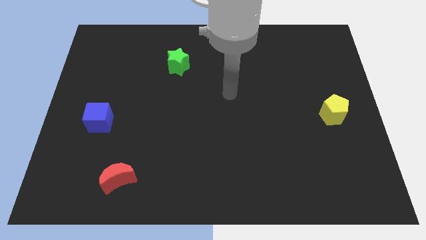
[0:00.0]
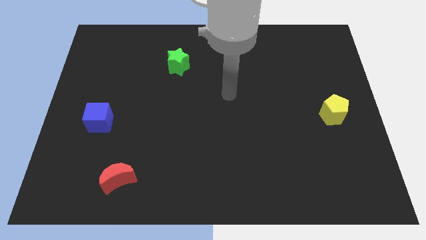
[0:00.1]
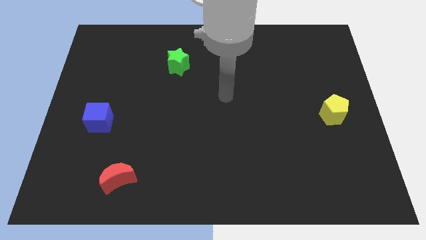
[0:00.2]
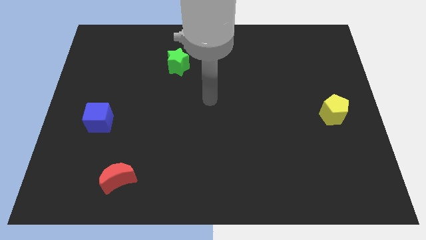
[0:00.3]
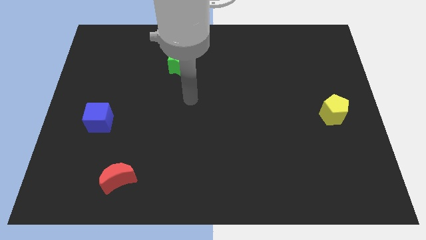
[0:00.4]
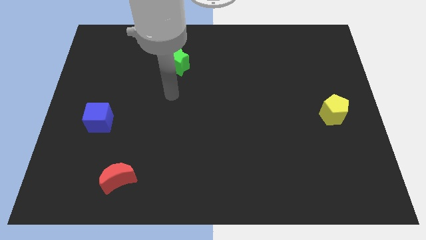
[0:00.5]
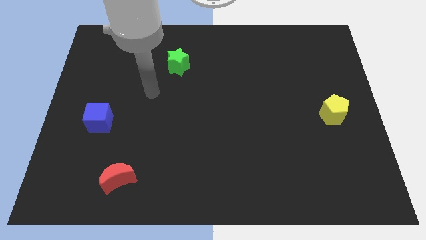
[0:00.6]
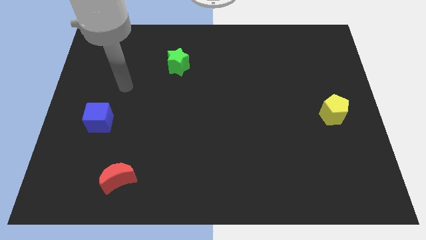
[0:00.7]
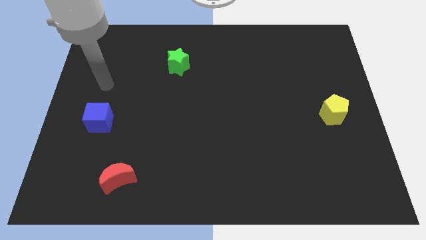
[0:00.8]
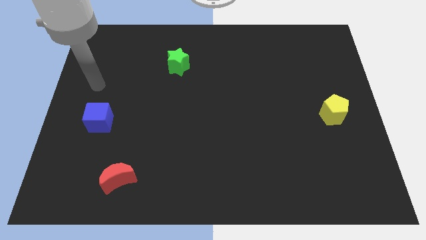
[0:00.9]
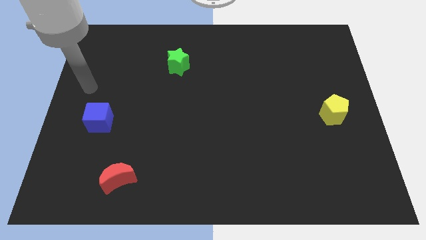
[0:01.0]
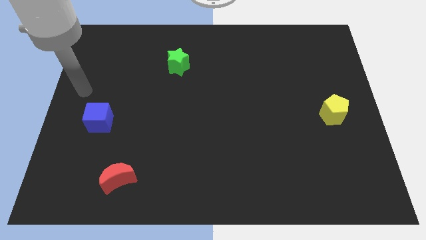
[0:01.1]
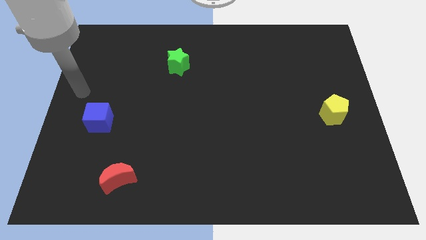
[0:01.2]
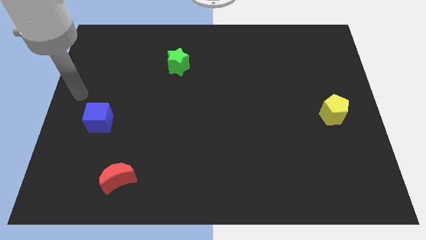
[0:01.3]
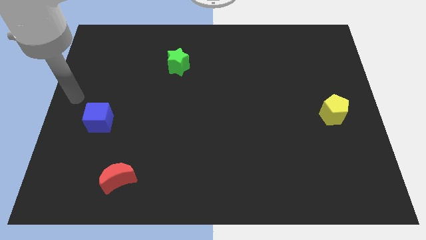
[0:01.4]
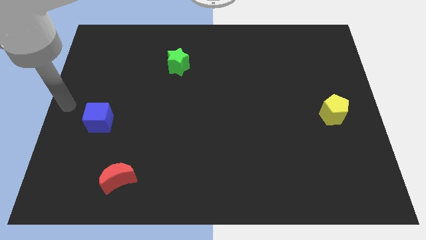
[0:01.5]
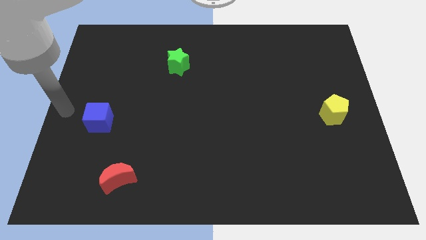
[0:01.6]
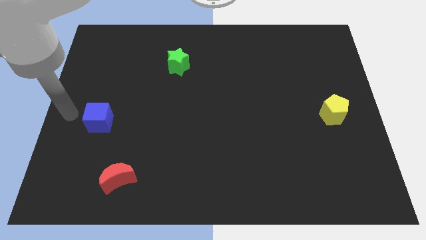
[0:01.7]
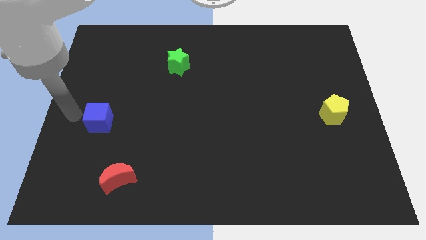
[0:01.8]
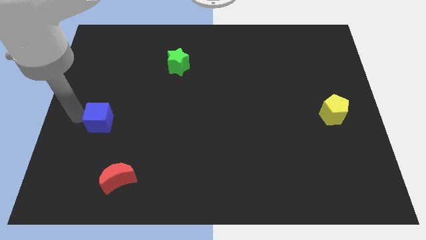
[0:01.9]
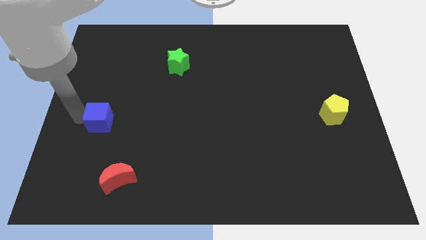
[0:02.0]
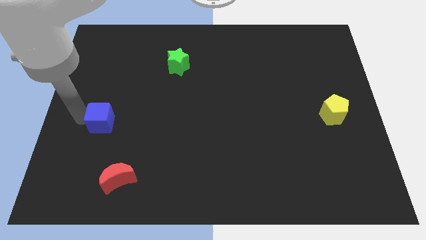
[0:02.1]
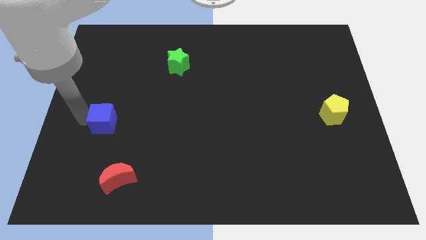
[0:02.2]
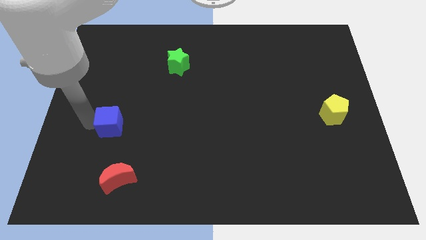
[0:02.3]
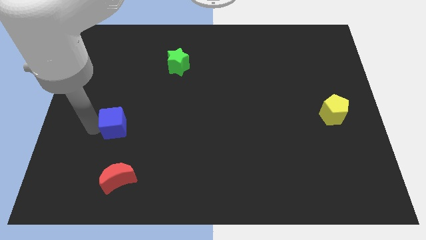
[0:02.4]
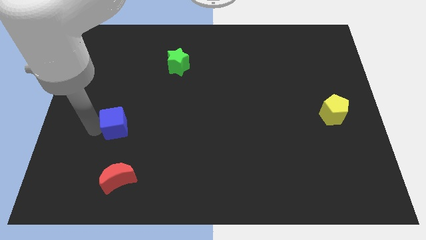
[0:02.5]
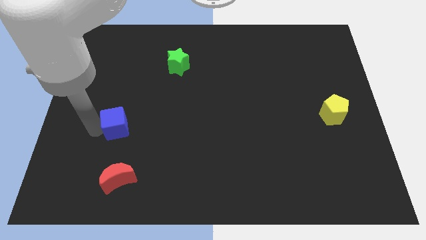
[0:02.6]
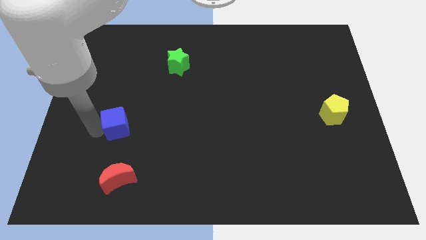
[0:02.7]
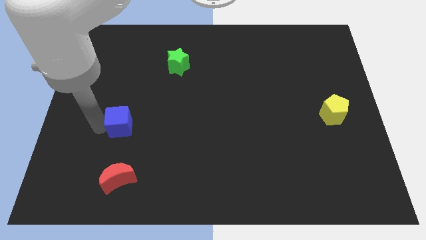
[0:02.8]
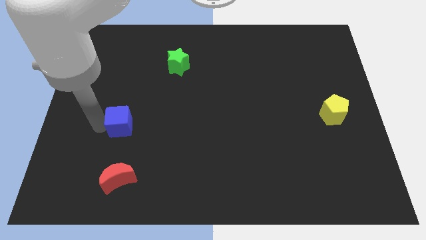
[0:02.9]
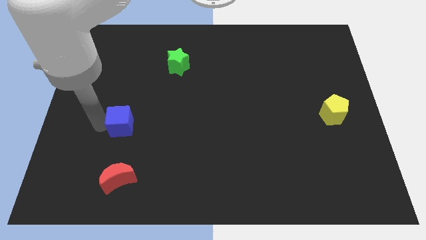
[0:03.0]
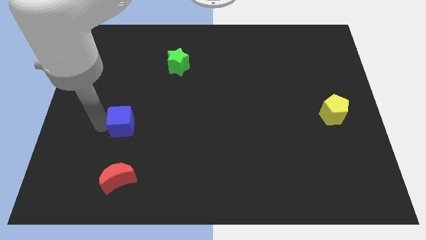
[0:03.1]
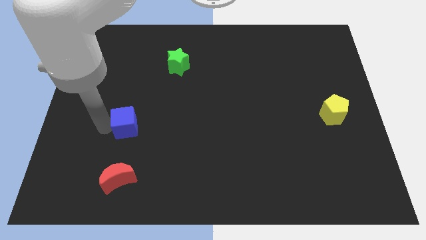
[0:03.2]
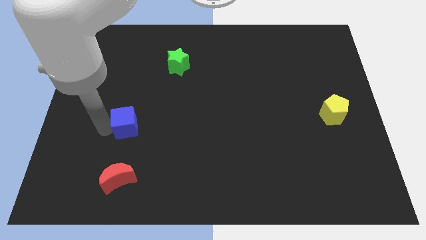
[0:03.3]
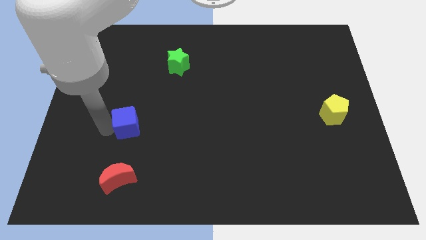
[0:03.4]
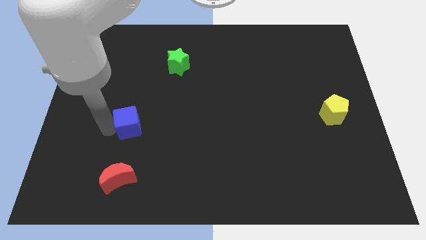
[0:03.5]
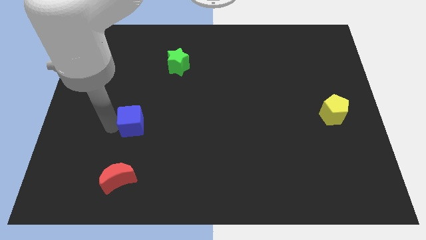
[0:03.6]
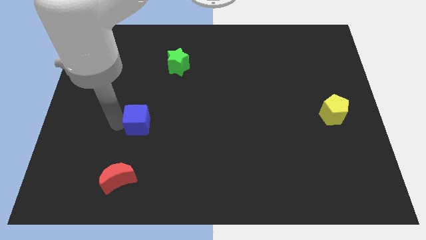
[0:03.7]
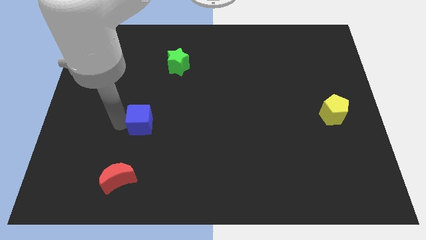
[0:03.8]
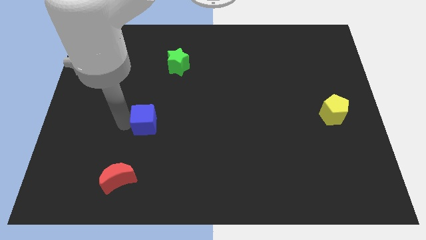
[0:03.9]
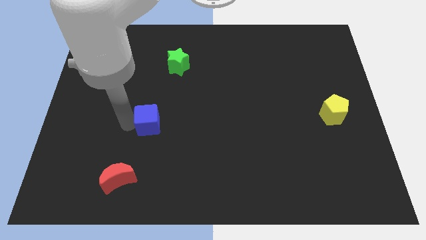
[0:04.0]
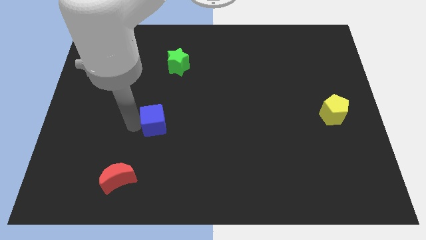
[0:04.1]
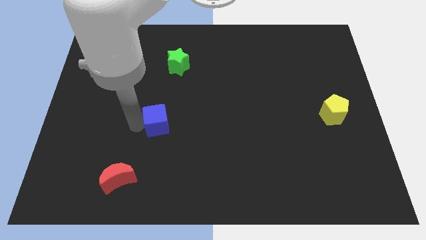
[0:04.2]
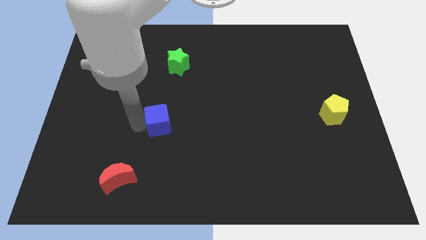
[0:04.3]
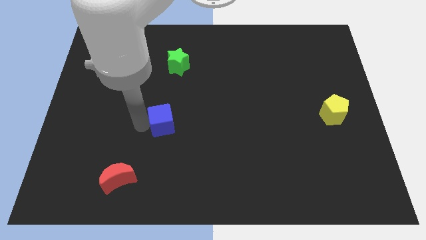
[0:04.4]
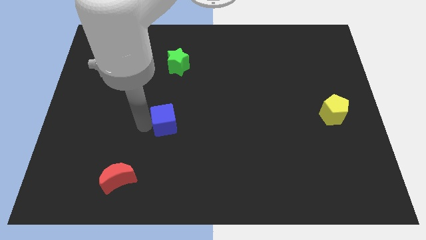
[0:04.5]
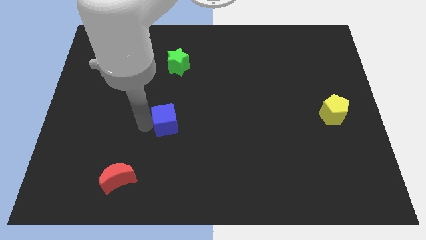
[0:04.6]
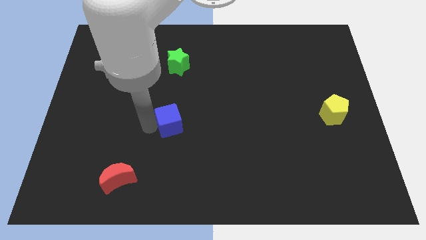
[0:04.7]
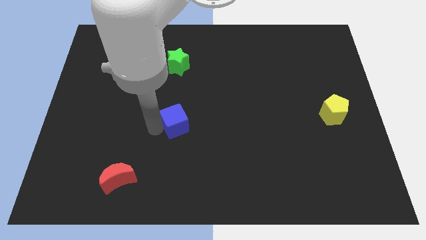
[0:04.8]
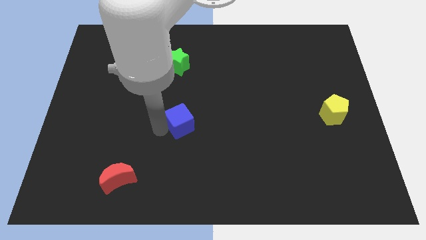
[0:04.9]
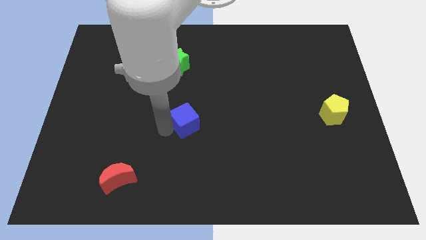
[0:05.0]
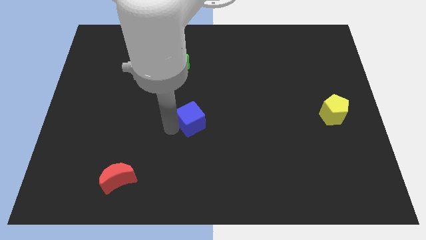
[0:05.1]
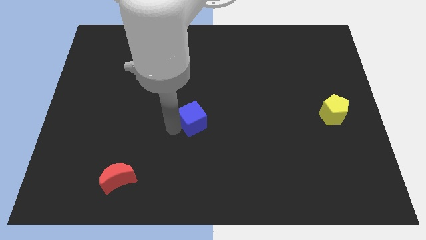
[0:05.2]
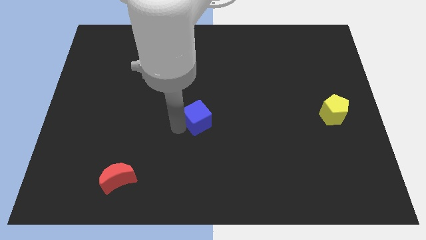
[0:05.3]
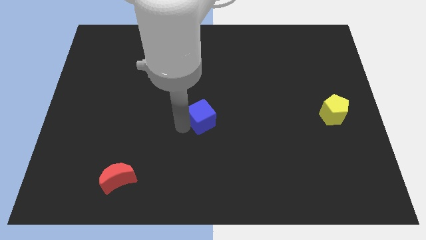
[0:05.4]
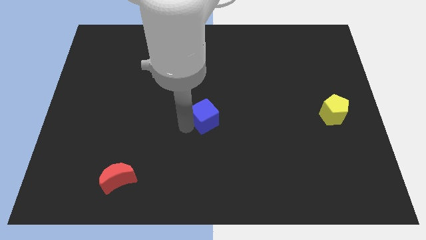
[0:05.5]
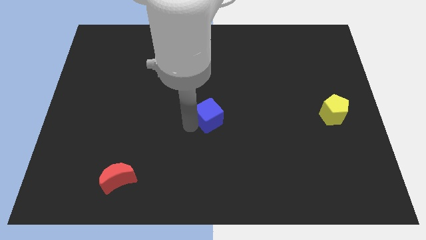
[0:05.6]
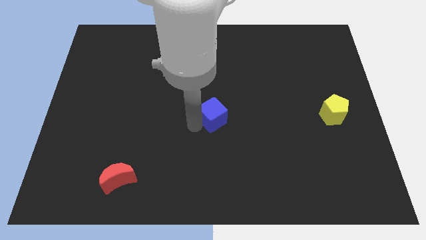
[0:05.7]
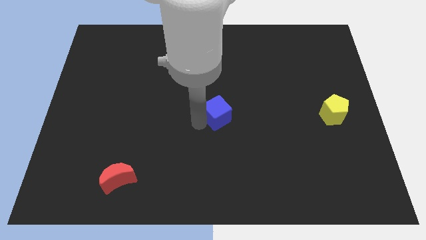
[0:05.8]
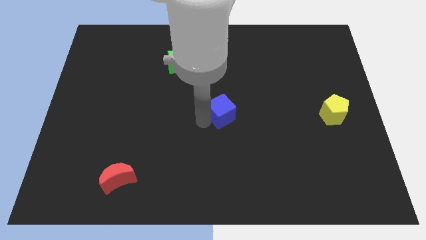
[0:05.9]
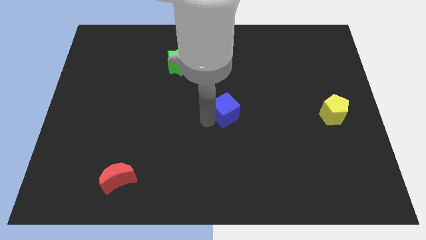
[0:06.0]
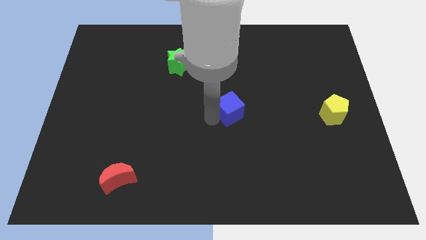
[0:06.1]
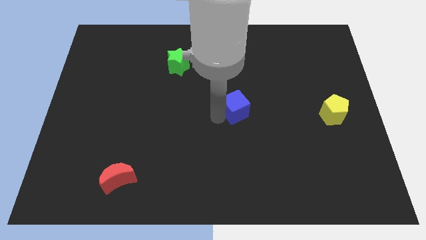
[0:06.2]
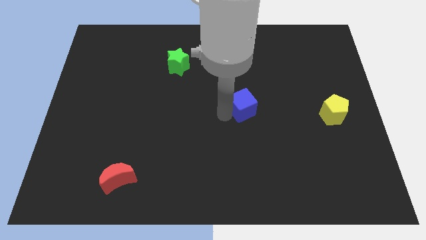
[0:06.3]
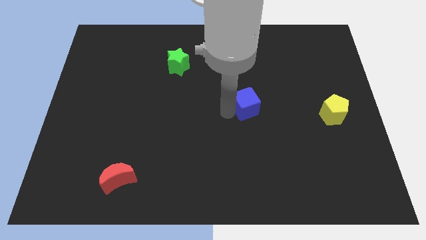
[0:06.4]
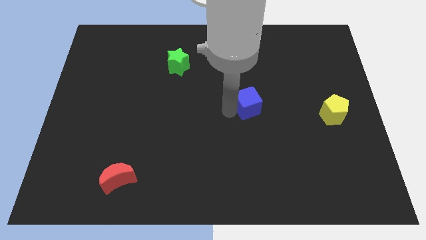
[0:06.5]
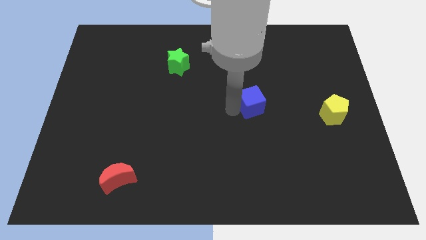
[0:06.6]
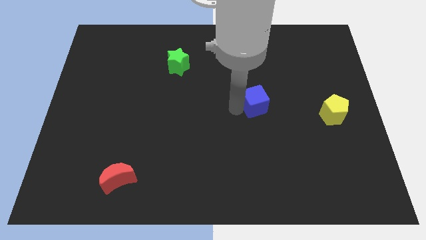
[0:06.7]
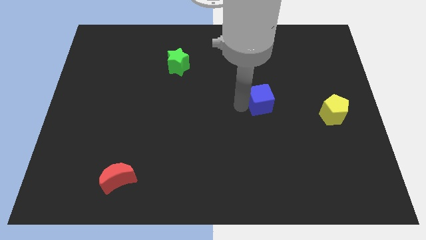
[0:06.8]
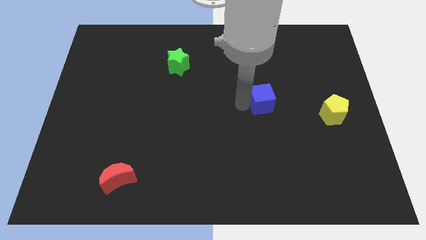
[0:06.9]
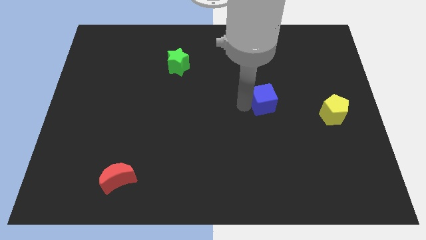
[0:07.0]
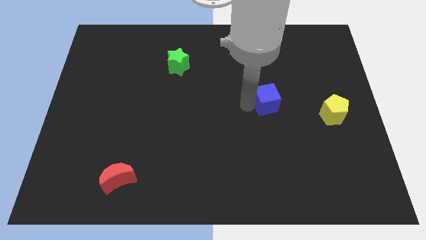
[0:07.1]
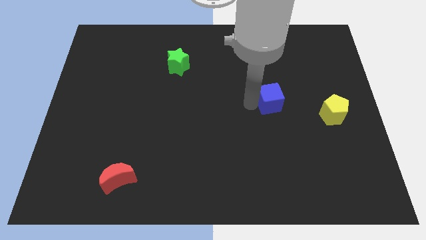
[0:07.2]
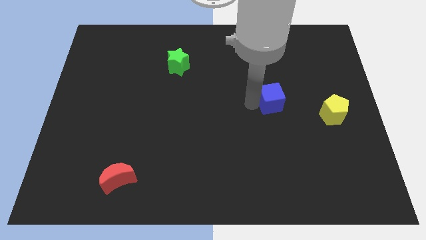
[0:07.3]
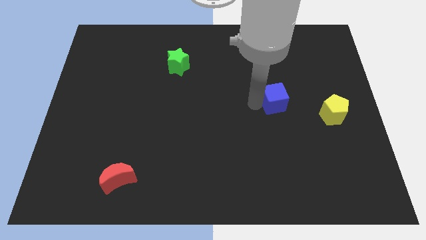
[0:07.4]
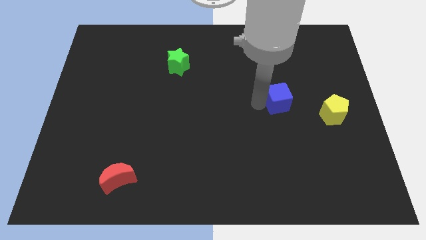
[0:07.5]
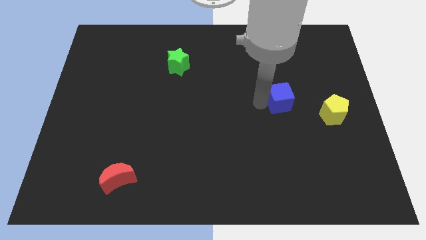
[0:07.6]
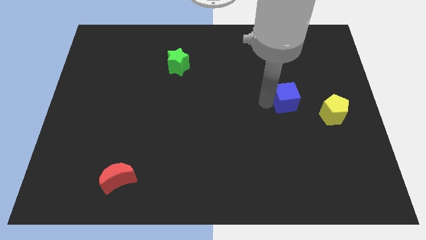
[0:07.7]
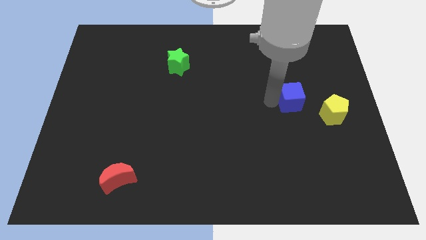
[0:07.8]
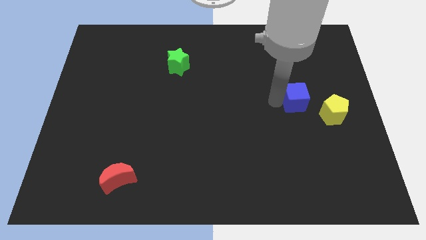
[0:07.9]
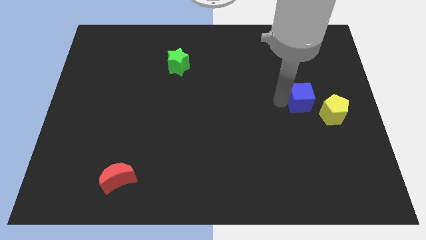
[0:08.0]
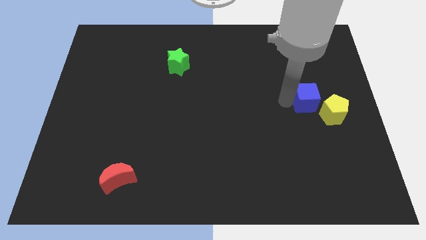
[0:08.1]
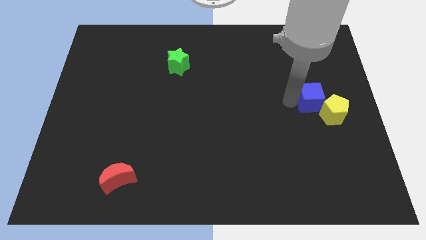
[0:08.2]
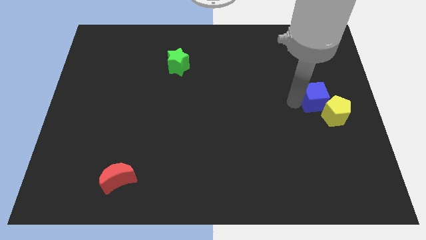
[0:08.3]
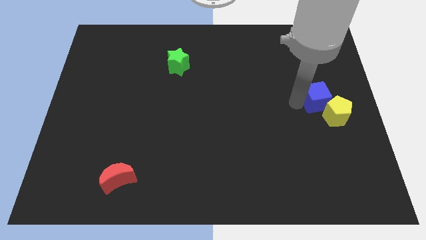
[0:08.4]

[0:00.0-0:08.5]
push the blue block close to the pentagon
